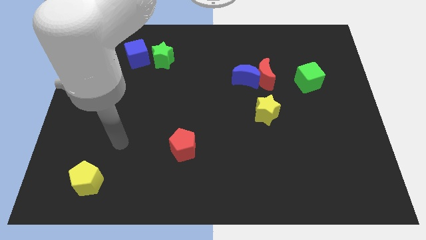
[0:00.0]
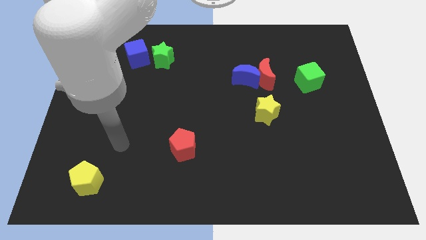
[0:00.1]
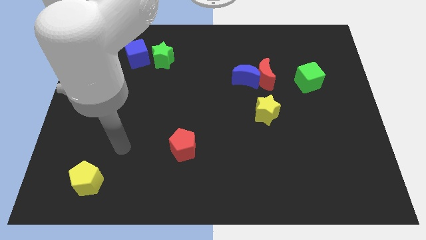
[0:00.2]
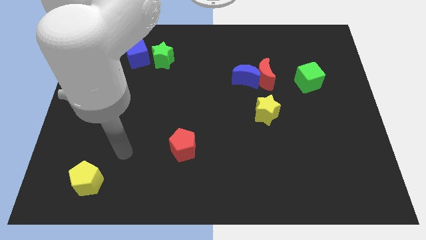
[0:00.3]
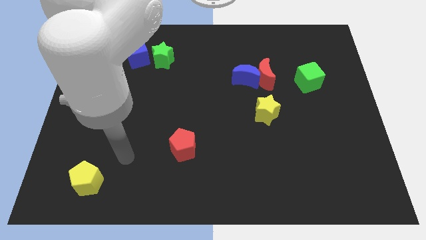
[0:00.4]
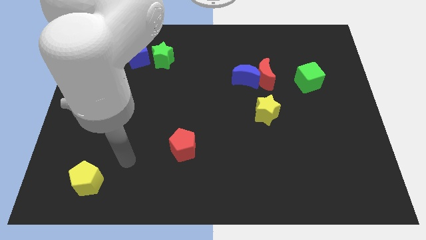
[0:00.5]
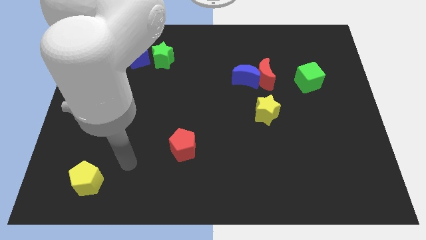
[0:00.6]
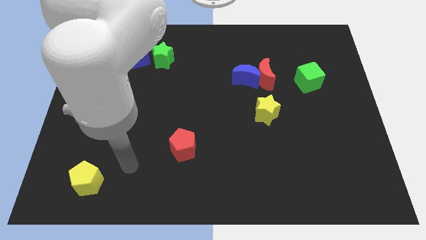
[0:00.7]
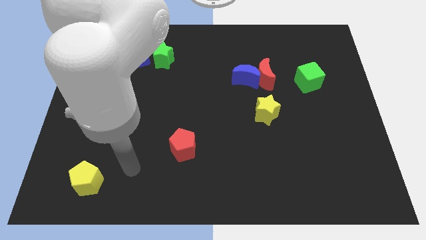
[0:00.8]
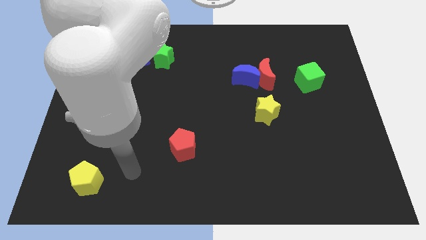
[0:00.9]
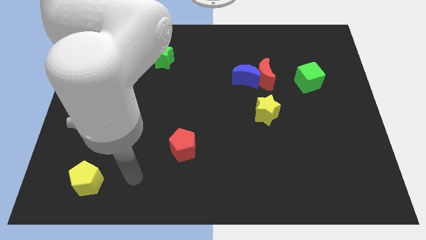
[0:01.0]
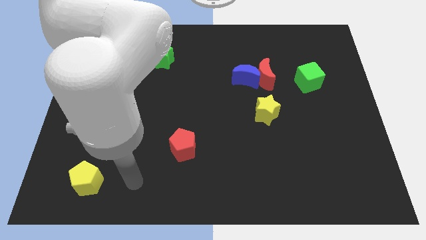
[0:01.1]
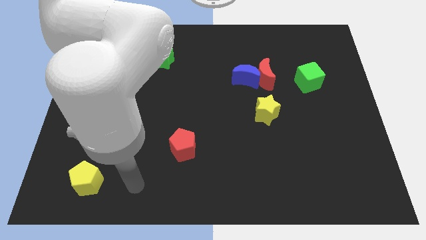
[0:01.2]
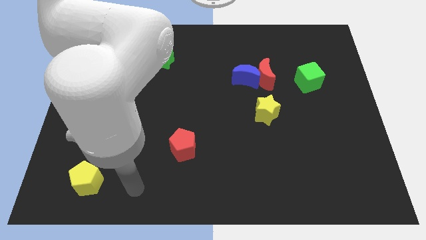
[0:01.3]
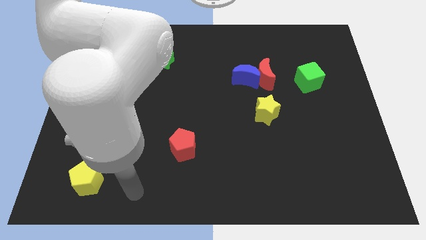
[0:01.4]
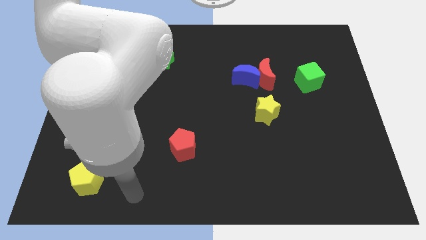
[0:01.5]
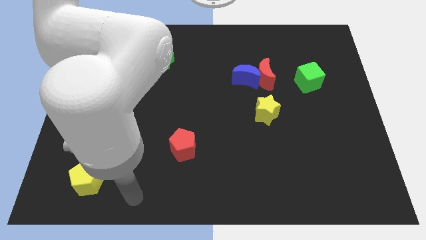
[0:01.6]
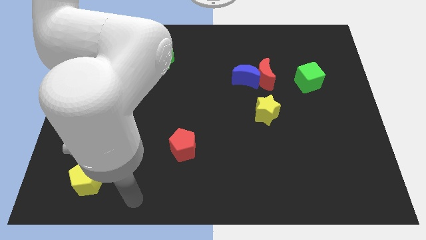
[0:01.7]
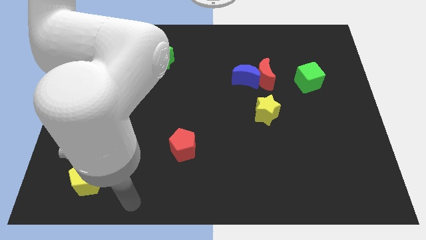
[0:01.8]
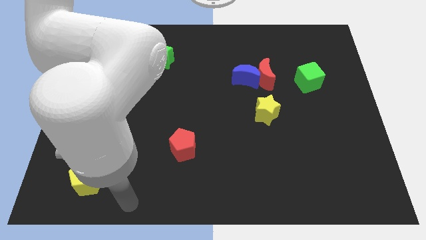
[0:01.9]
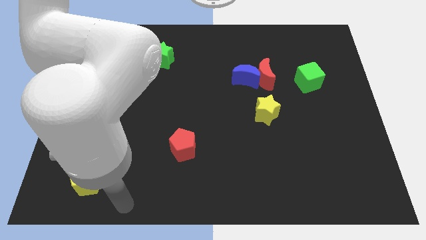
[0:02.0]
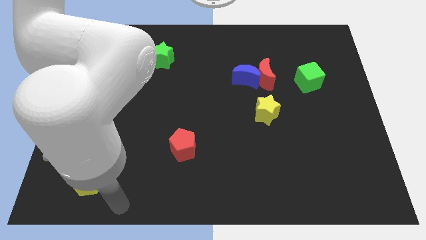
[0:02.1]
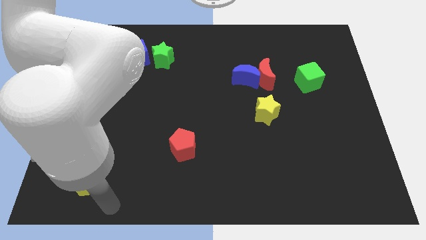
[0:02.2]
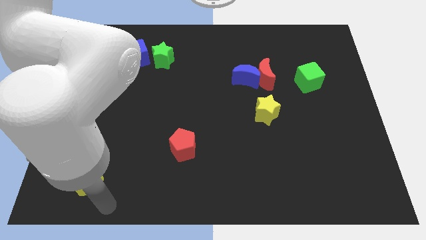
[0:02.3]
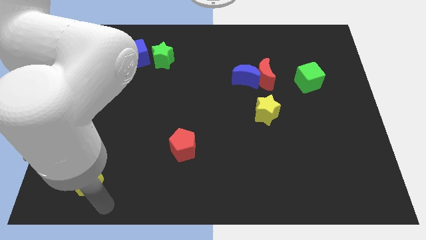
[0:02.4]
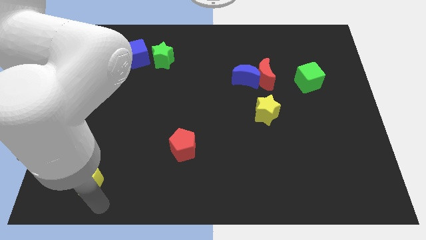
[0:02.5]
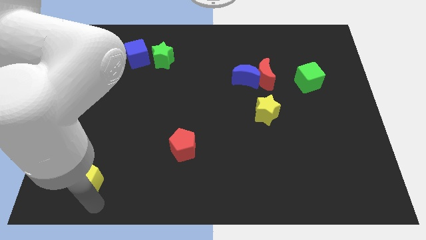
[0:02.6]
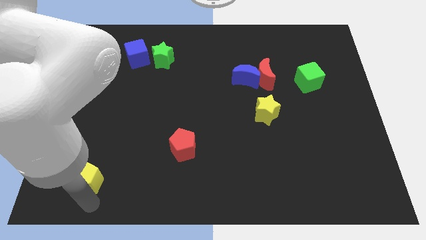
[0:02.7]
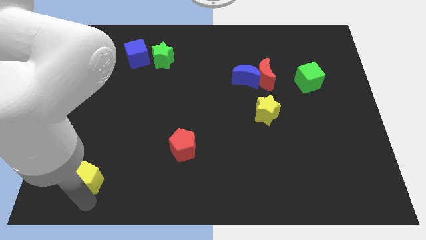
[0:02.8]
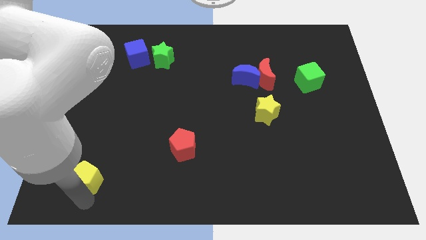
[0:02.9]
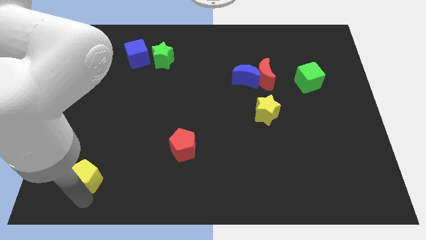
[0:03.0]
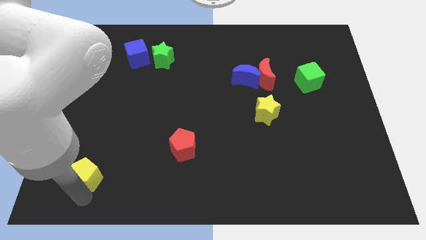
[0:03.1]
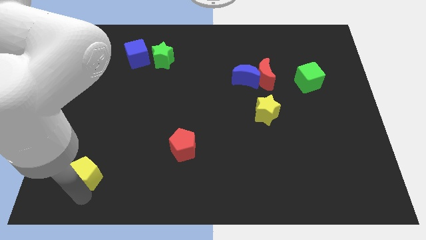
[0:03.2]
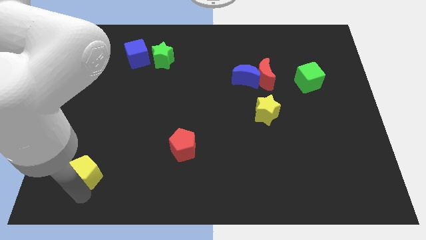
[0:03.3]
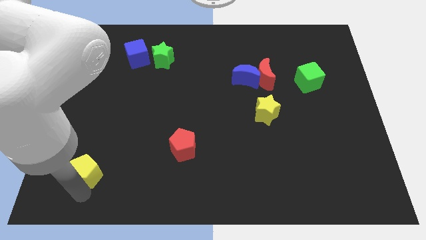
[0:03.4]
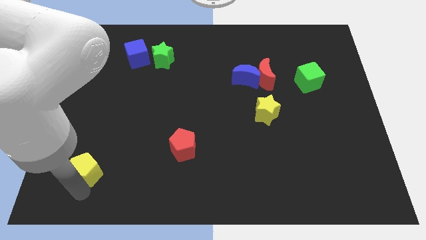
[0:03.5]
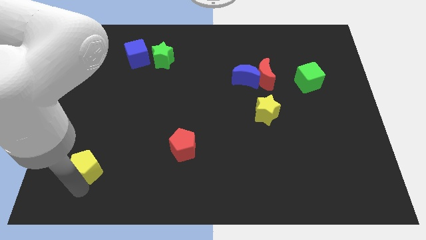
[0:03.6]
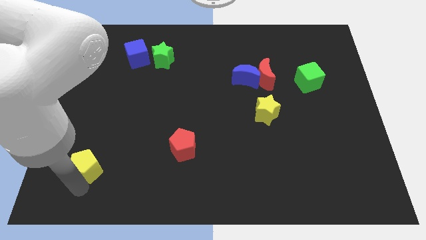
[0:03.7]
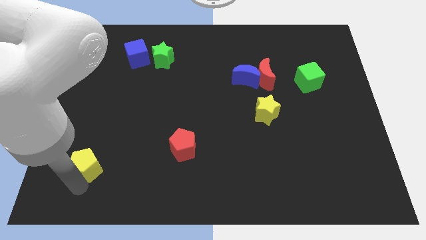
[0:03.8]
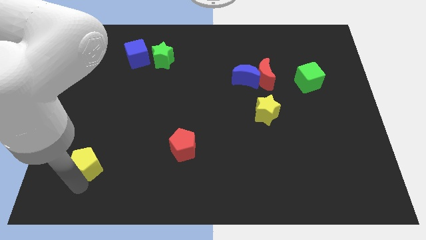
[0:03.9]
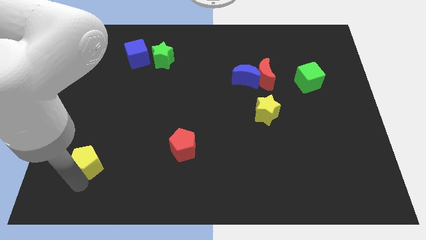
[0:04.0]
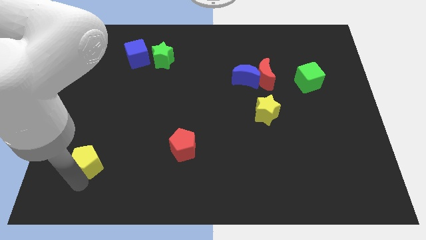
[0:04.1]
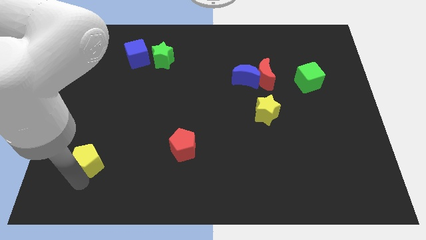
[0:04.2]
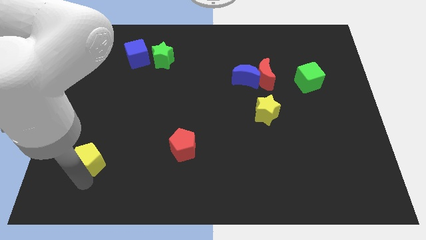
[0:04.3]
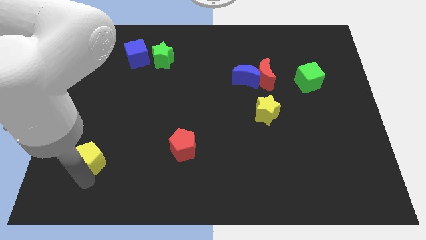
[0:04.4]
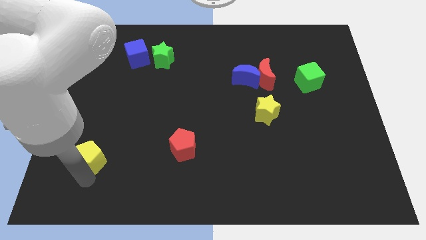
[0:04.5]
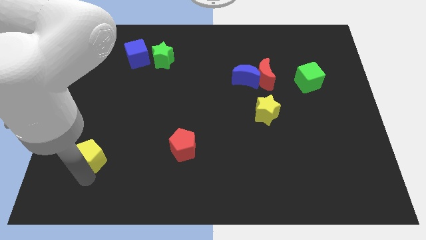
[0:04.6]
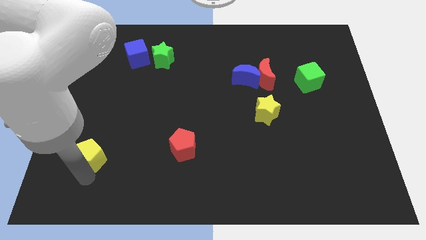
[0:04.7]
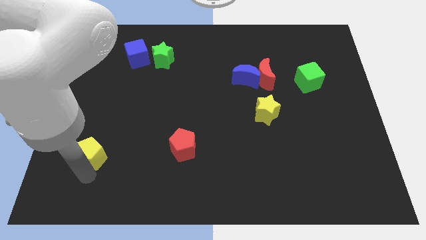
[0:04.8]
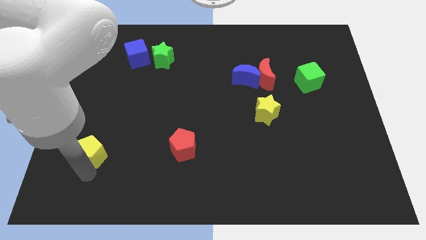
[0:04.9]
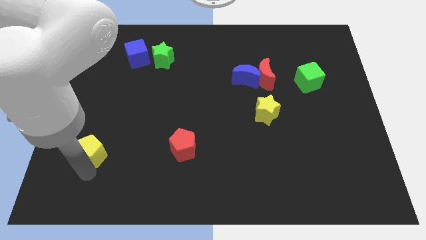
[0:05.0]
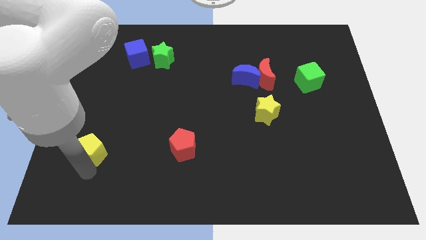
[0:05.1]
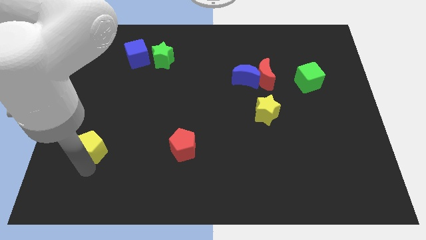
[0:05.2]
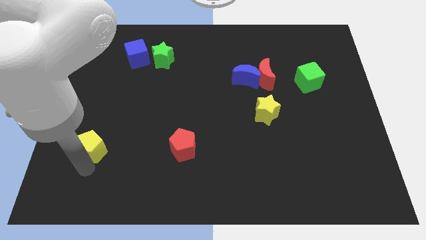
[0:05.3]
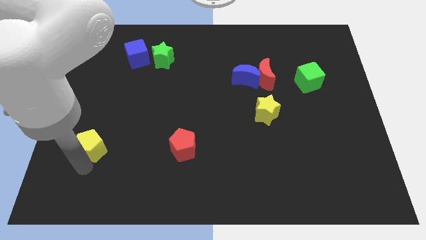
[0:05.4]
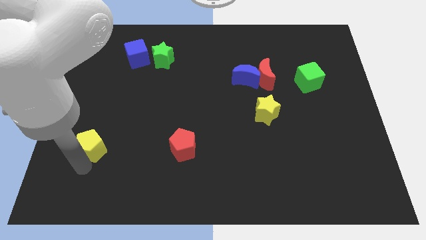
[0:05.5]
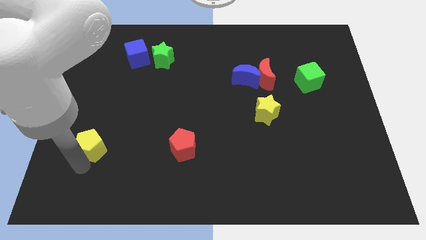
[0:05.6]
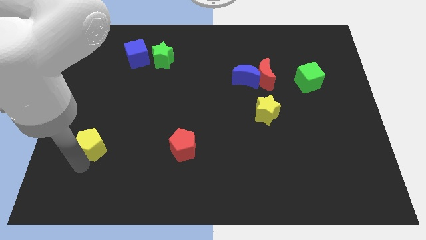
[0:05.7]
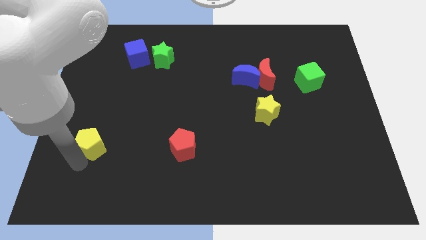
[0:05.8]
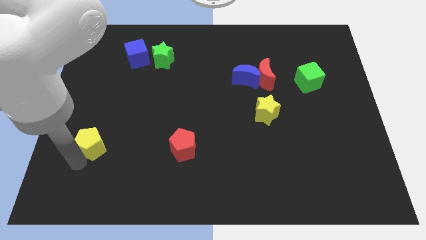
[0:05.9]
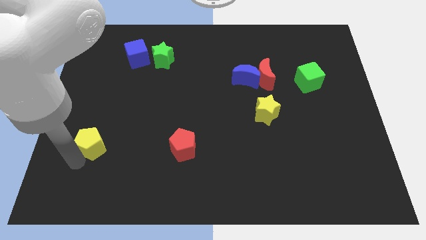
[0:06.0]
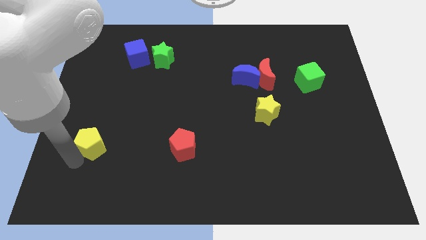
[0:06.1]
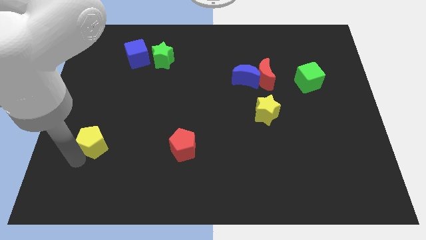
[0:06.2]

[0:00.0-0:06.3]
place the yellow pentagon to the left of the red pentagon

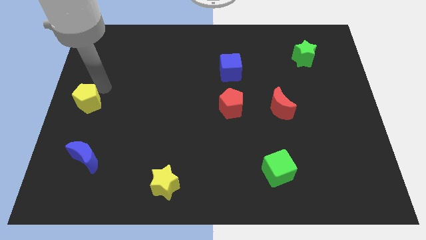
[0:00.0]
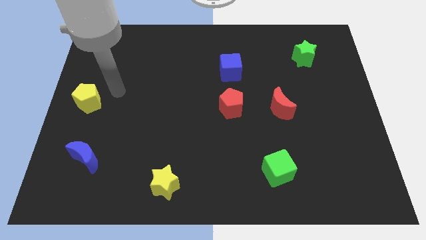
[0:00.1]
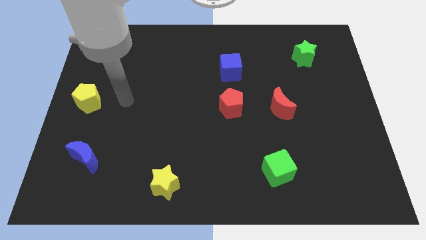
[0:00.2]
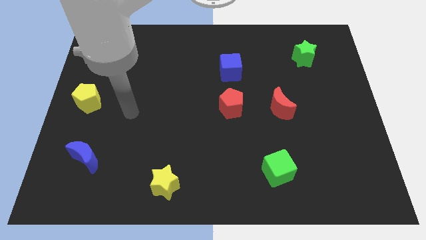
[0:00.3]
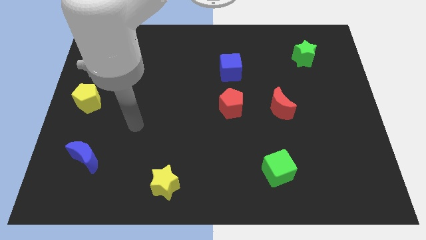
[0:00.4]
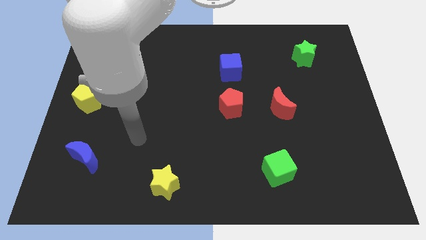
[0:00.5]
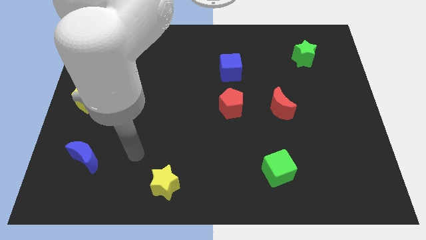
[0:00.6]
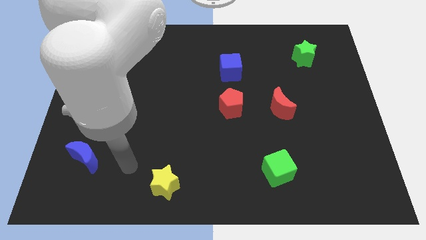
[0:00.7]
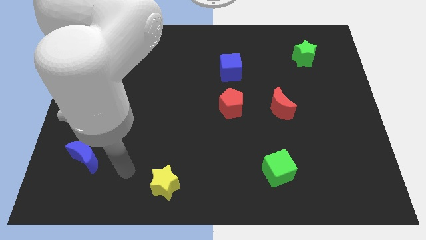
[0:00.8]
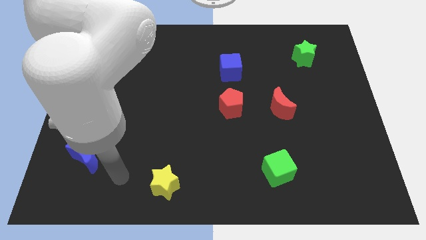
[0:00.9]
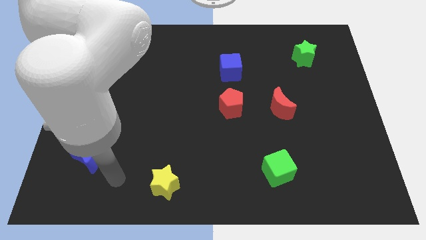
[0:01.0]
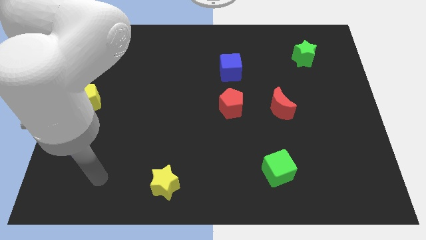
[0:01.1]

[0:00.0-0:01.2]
move your arm away from the yellow pentagon

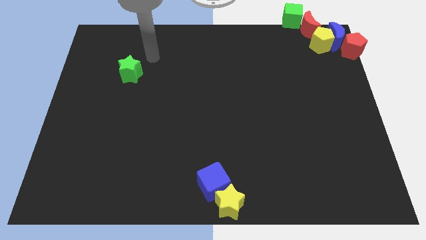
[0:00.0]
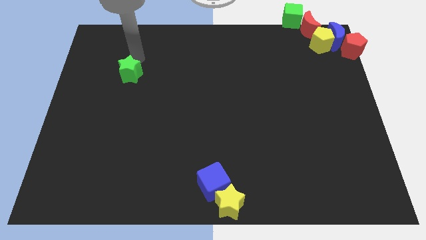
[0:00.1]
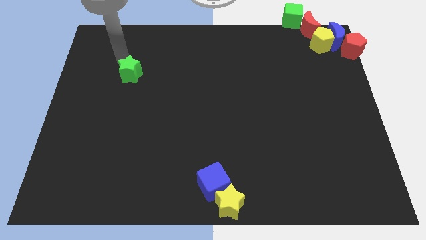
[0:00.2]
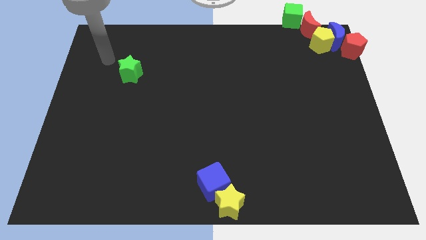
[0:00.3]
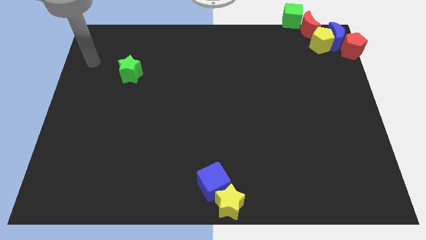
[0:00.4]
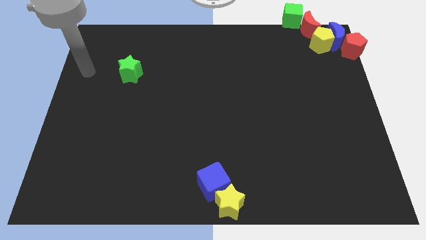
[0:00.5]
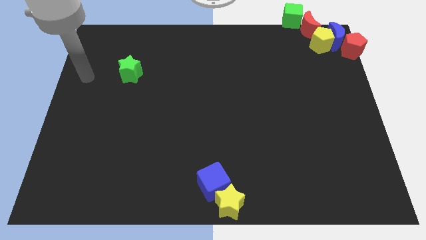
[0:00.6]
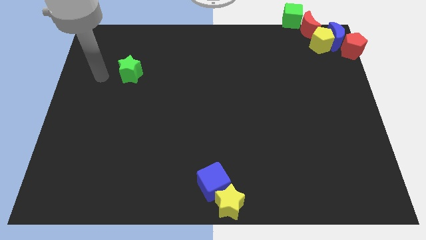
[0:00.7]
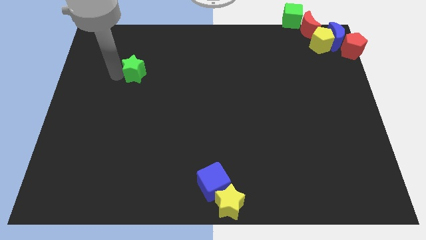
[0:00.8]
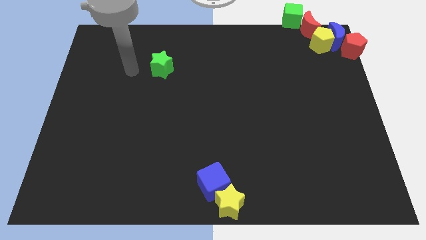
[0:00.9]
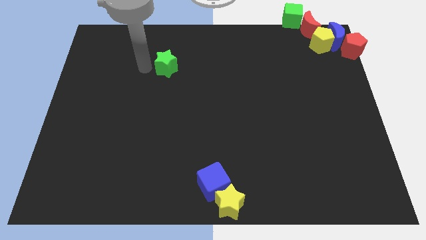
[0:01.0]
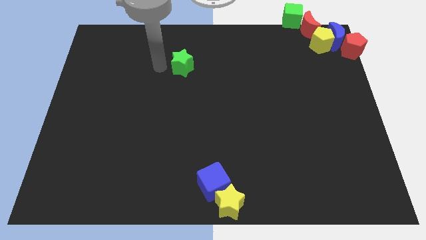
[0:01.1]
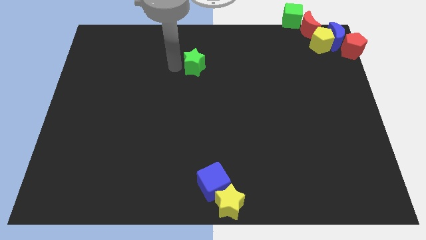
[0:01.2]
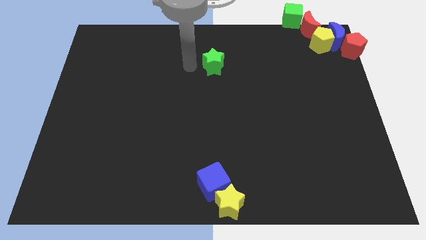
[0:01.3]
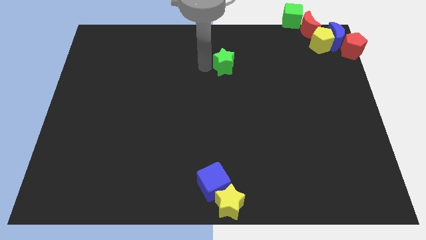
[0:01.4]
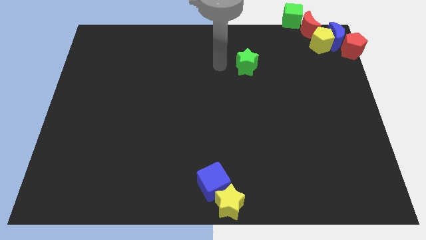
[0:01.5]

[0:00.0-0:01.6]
move the green star vertically to the top side of the blue cube
